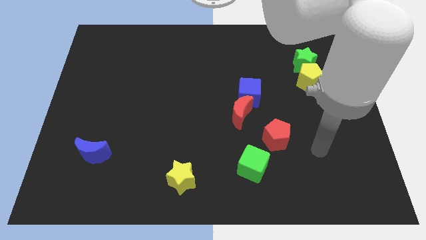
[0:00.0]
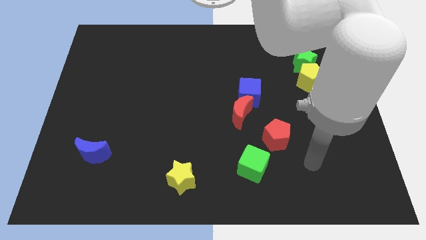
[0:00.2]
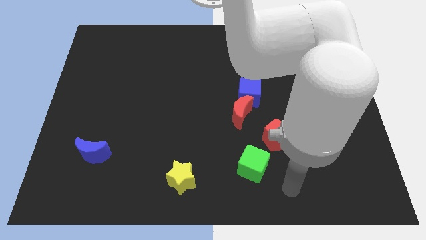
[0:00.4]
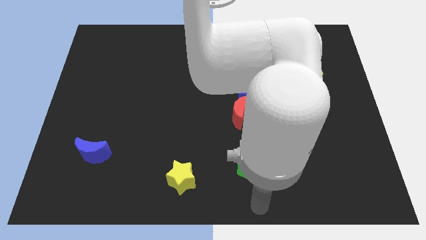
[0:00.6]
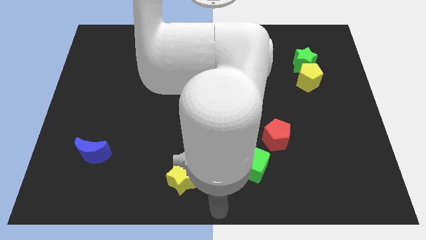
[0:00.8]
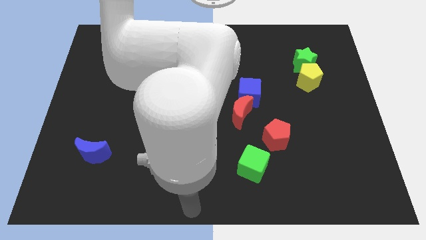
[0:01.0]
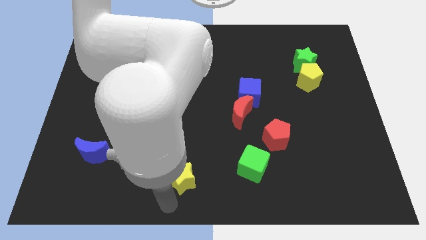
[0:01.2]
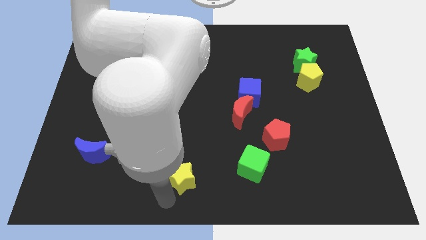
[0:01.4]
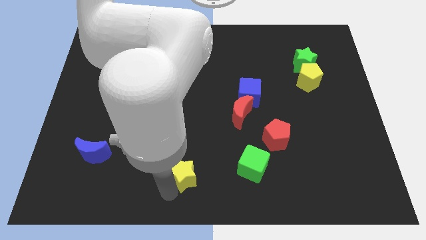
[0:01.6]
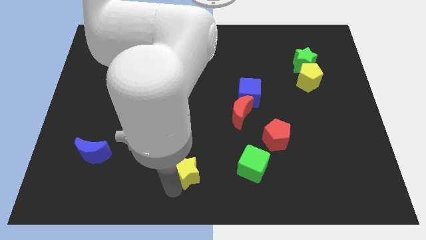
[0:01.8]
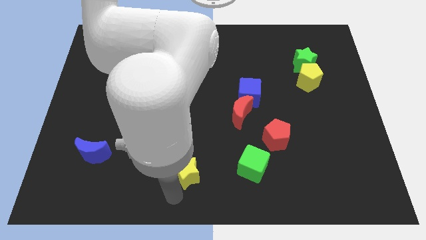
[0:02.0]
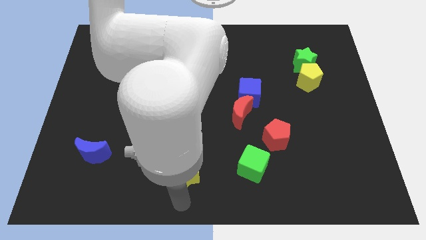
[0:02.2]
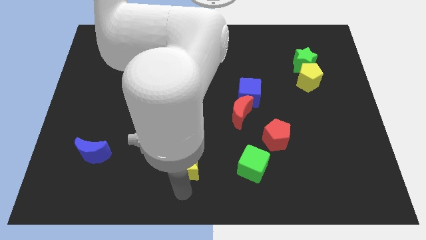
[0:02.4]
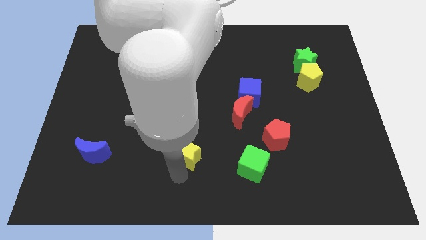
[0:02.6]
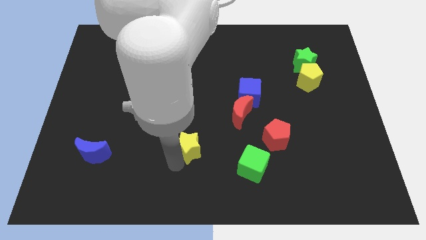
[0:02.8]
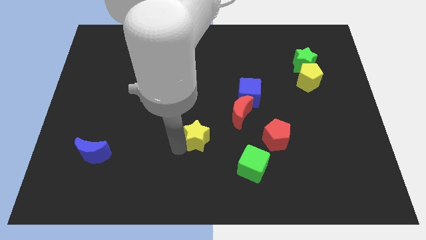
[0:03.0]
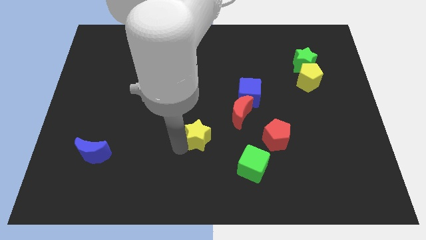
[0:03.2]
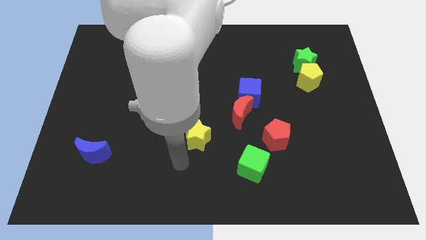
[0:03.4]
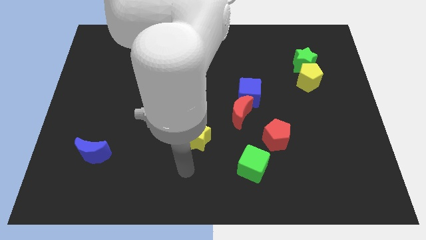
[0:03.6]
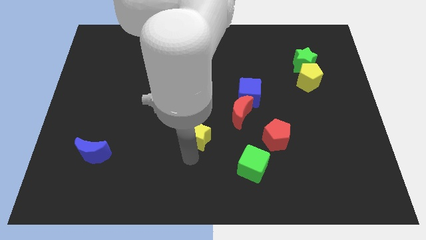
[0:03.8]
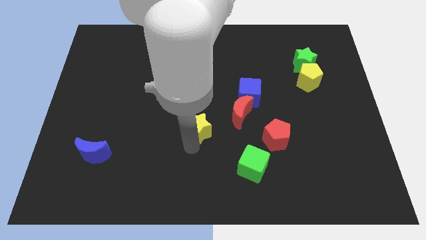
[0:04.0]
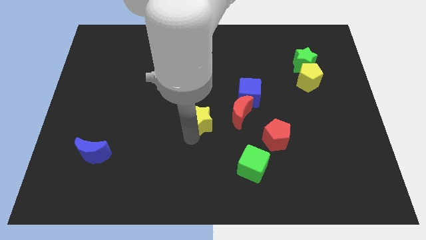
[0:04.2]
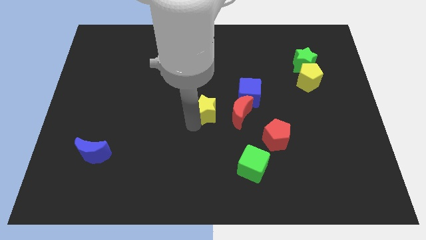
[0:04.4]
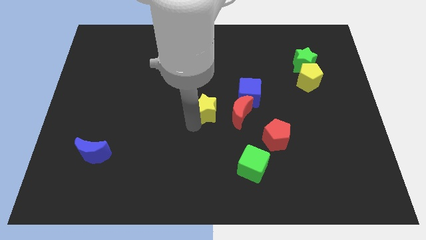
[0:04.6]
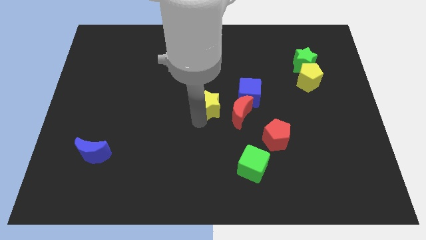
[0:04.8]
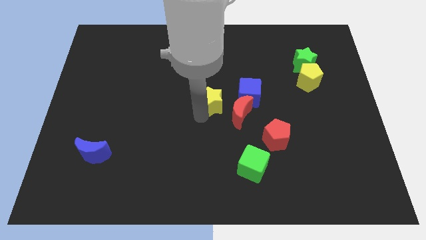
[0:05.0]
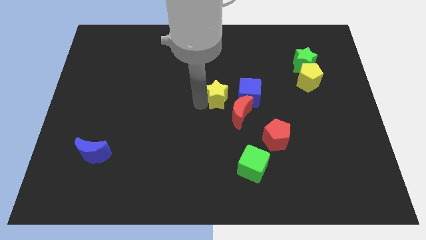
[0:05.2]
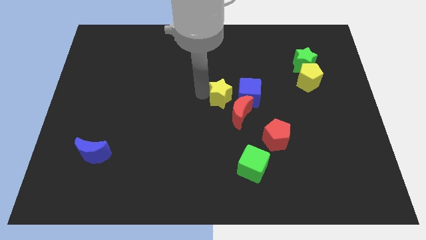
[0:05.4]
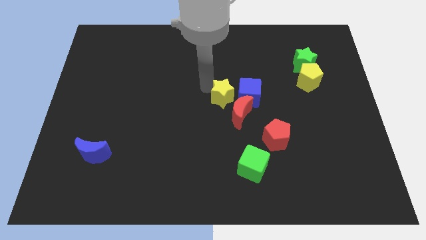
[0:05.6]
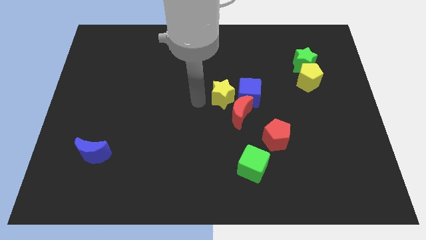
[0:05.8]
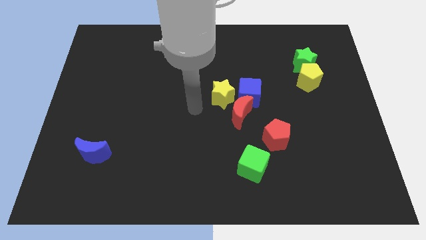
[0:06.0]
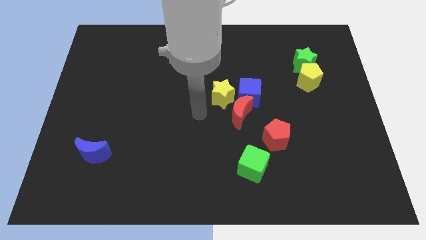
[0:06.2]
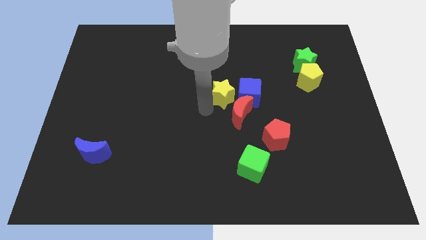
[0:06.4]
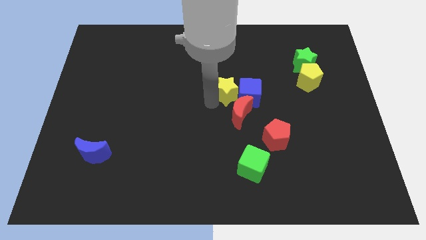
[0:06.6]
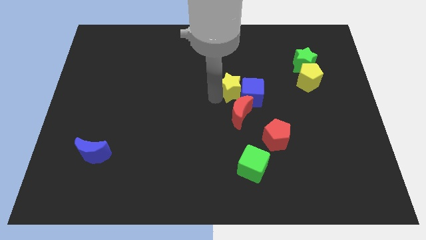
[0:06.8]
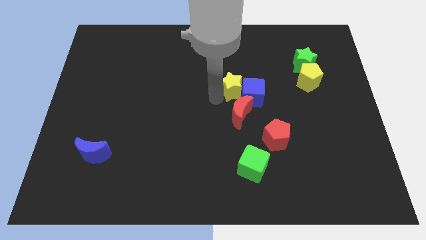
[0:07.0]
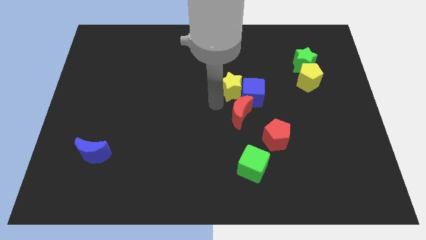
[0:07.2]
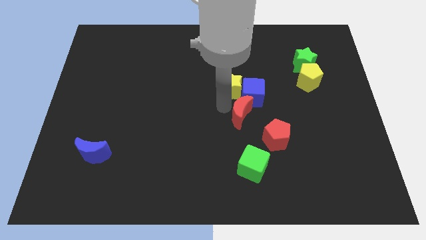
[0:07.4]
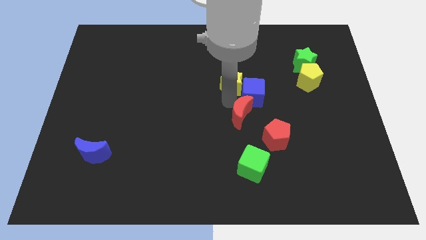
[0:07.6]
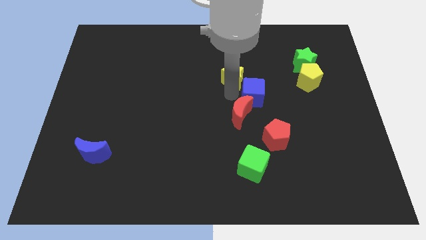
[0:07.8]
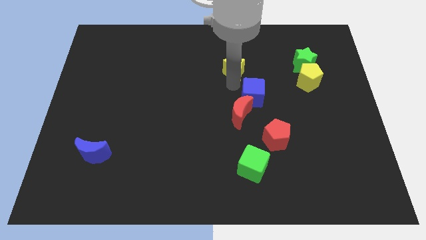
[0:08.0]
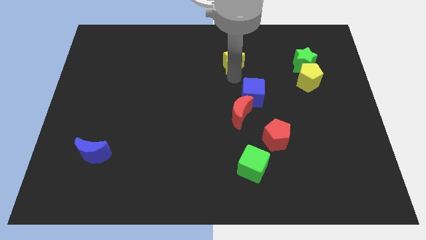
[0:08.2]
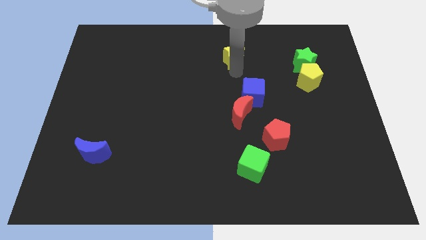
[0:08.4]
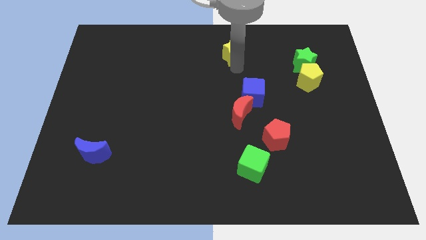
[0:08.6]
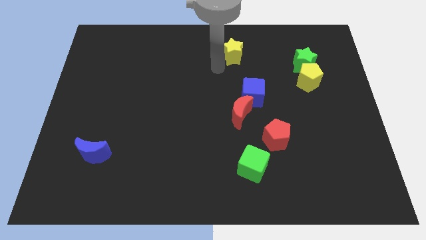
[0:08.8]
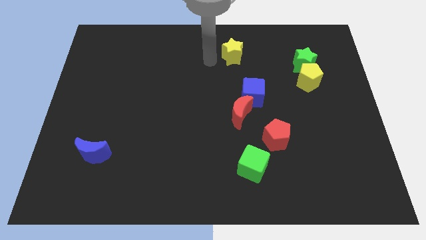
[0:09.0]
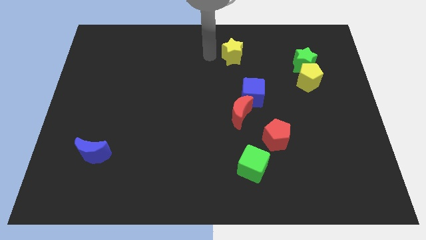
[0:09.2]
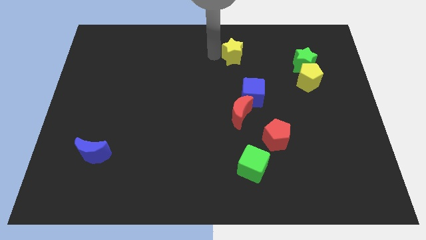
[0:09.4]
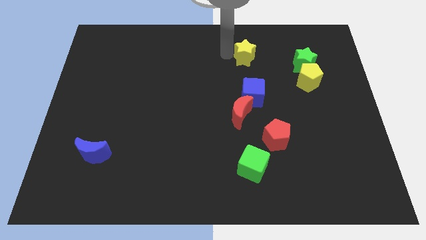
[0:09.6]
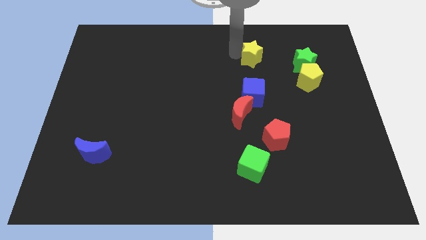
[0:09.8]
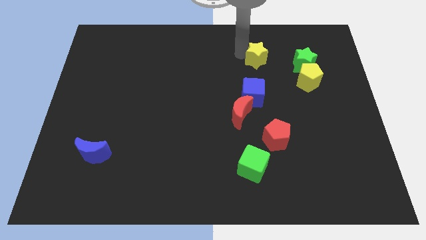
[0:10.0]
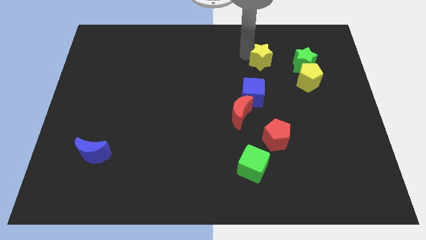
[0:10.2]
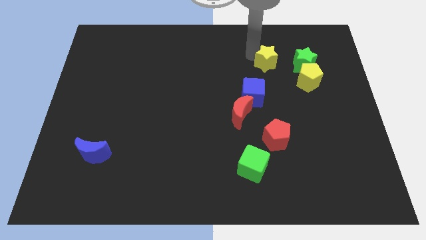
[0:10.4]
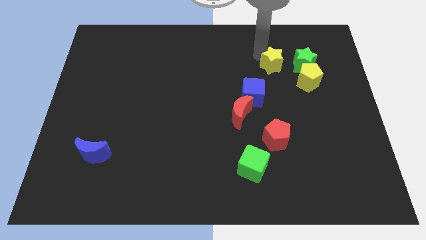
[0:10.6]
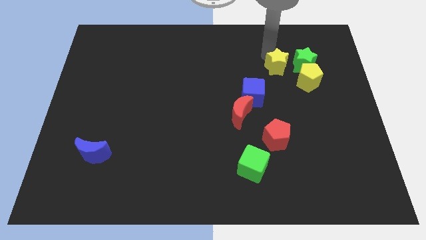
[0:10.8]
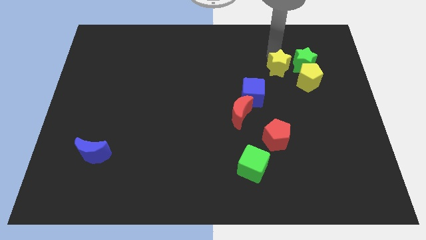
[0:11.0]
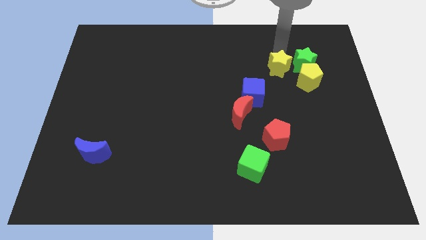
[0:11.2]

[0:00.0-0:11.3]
push the yellow star towards the green star

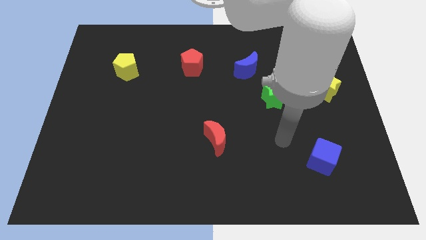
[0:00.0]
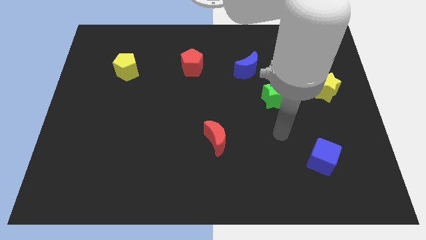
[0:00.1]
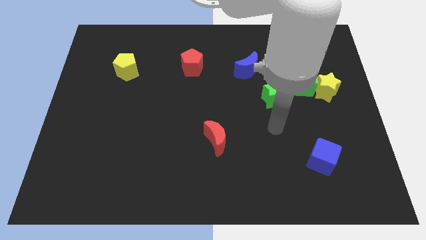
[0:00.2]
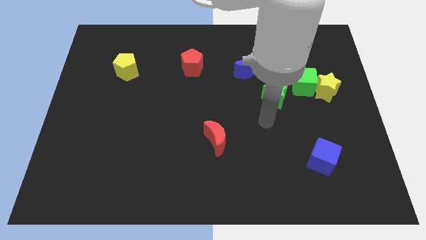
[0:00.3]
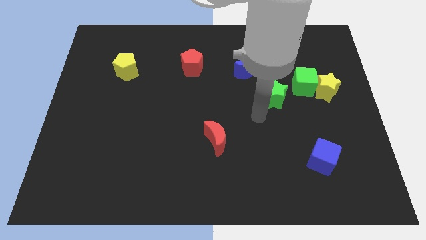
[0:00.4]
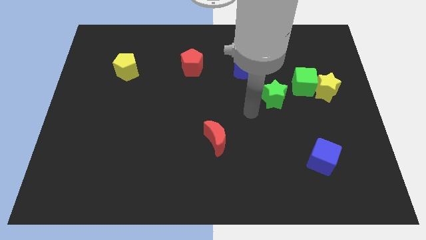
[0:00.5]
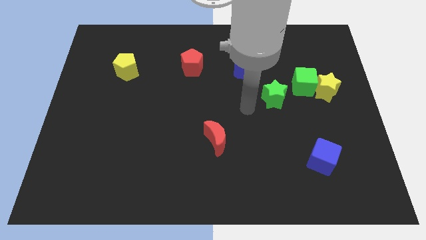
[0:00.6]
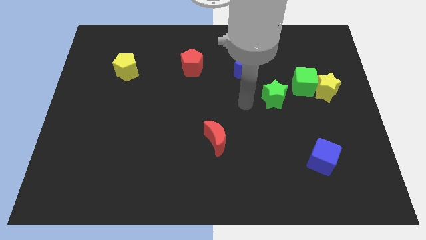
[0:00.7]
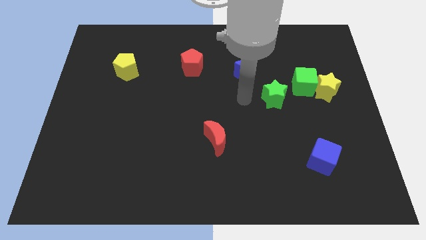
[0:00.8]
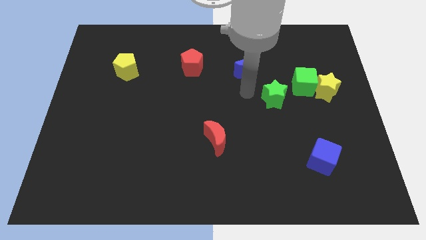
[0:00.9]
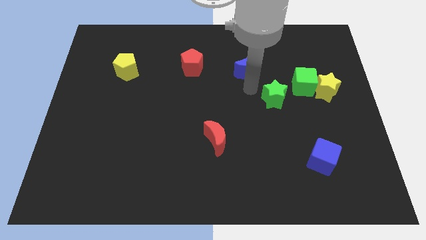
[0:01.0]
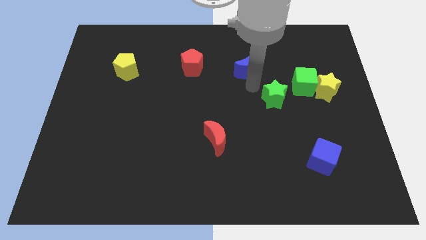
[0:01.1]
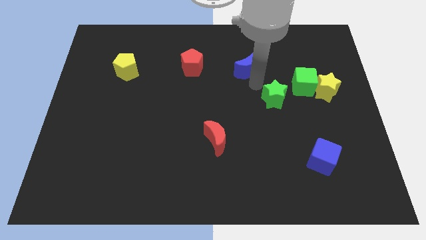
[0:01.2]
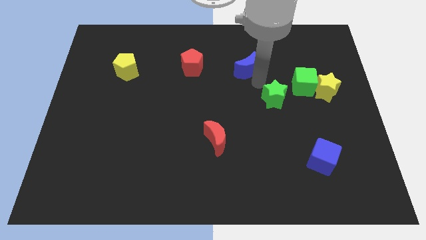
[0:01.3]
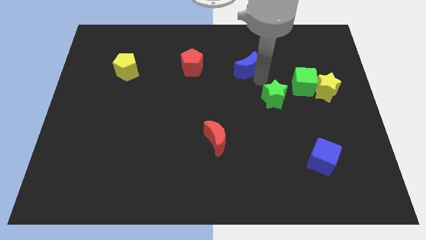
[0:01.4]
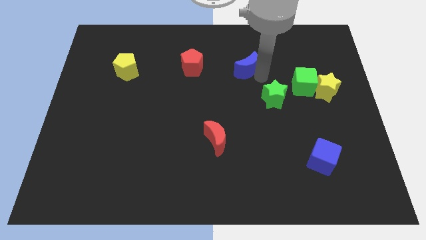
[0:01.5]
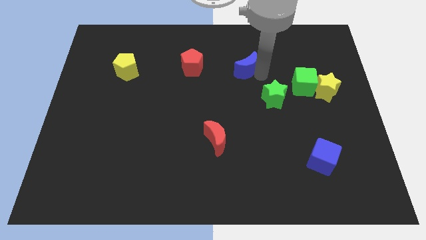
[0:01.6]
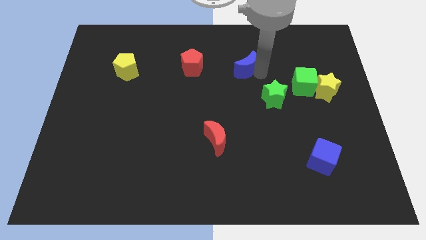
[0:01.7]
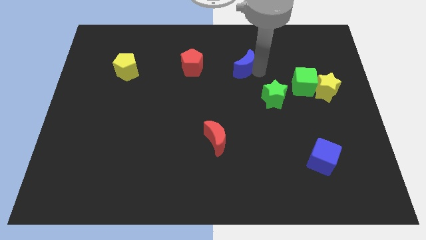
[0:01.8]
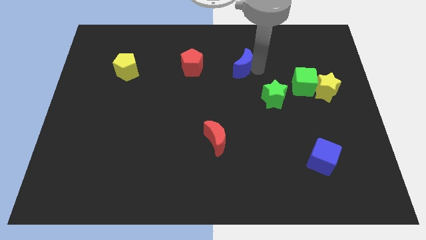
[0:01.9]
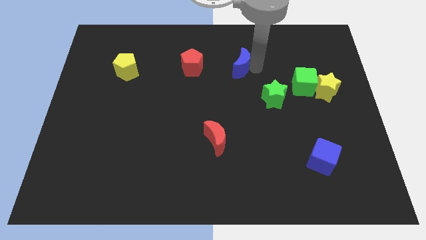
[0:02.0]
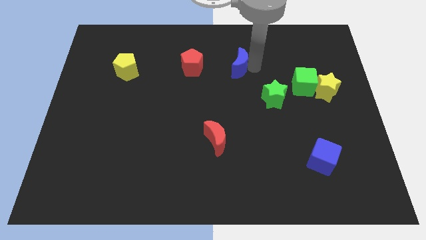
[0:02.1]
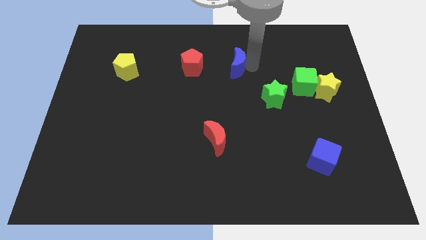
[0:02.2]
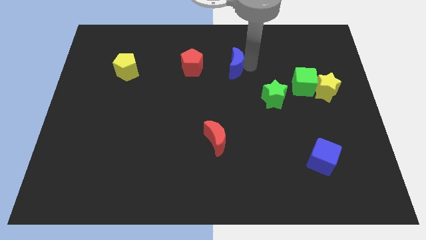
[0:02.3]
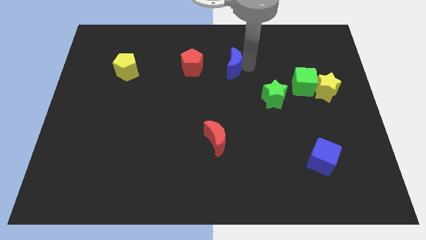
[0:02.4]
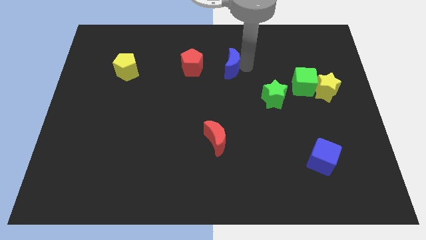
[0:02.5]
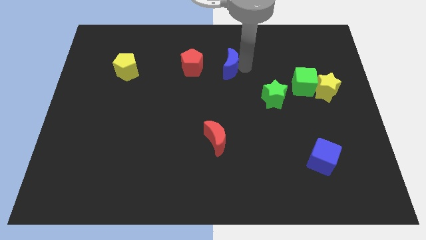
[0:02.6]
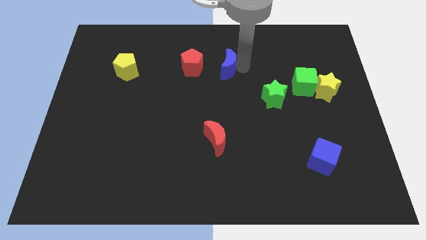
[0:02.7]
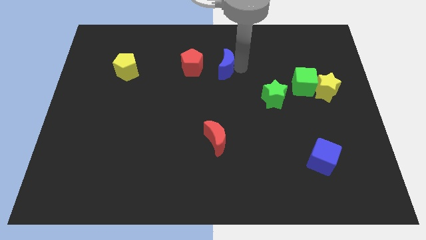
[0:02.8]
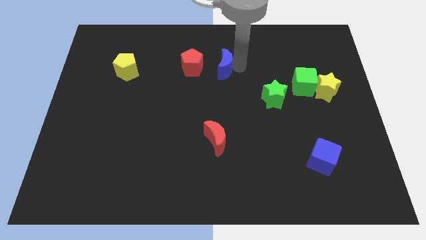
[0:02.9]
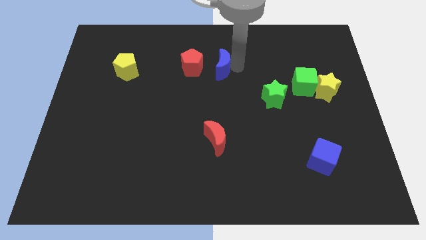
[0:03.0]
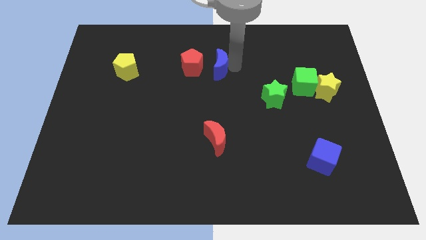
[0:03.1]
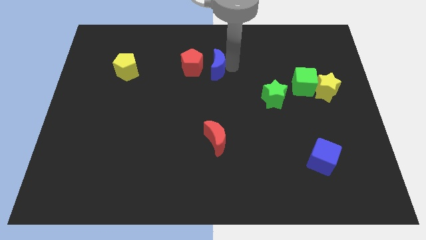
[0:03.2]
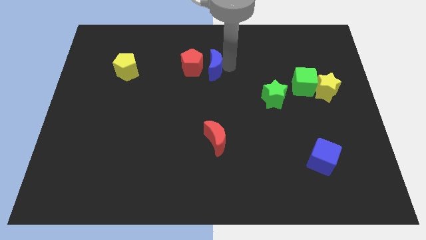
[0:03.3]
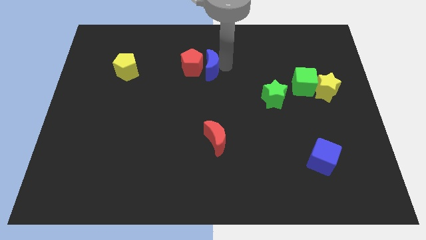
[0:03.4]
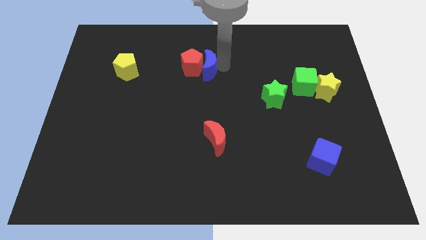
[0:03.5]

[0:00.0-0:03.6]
put the blue moon to the red pentagon
